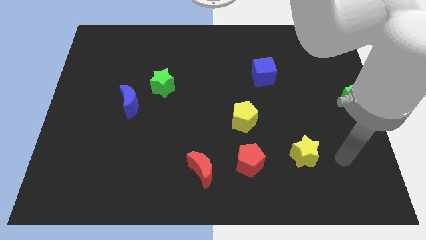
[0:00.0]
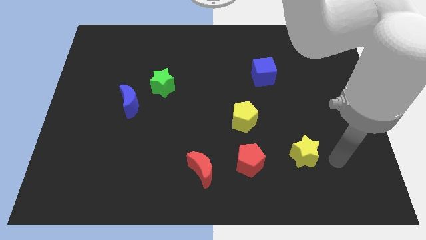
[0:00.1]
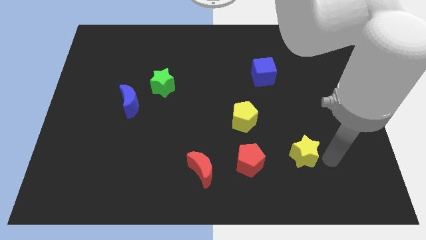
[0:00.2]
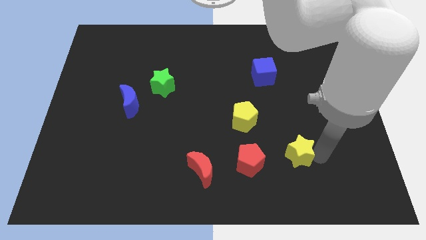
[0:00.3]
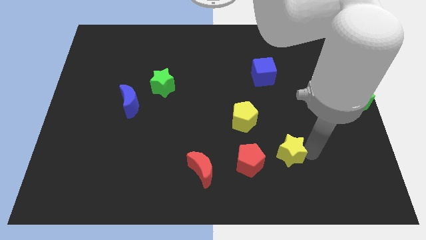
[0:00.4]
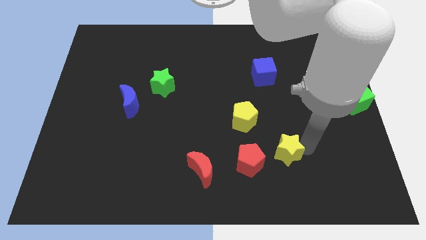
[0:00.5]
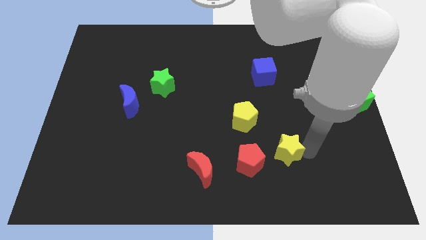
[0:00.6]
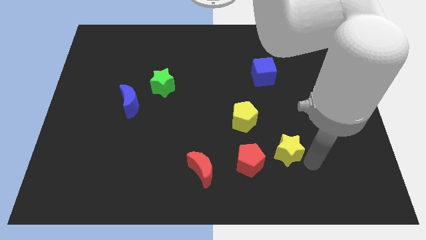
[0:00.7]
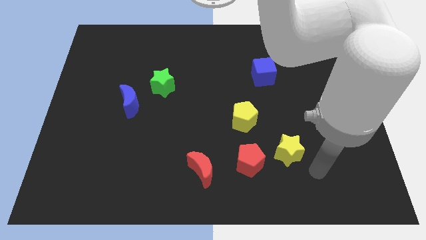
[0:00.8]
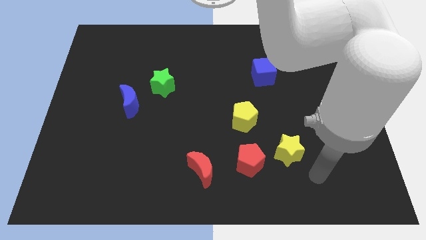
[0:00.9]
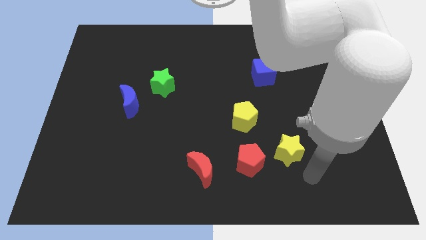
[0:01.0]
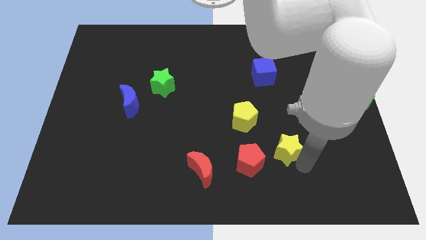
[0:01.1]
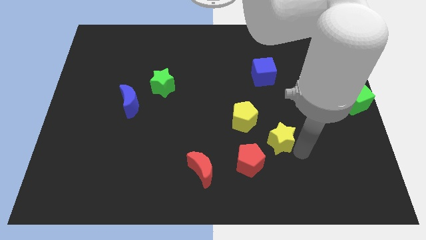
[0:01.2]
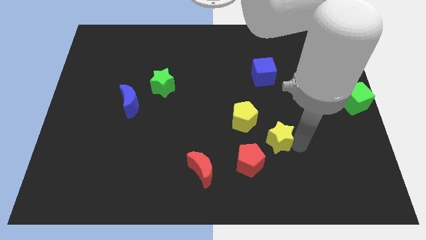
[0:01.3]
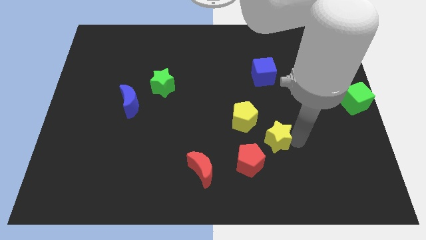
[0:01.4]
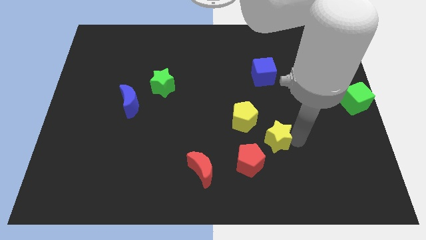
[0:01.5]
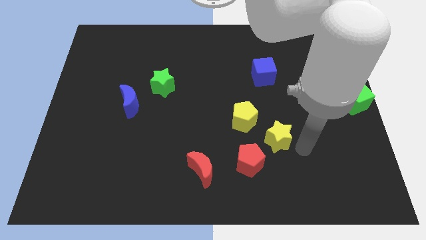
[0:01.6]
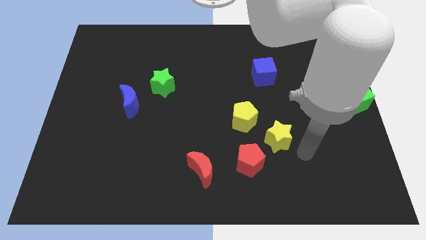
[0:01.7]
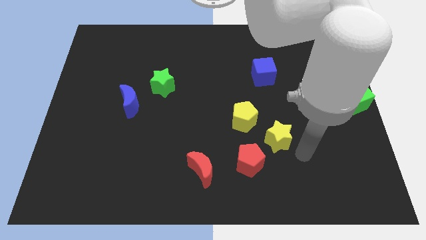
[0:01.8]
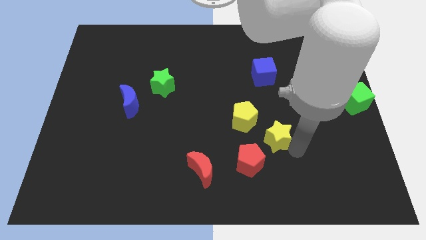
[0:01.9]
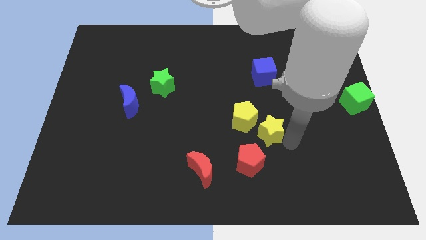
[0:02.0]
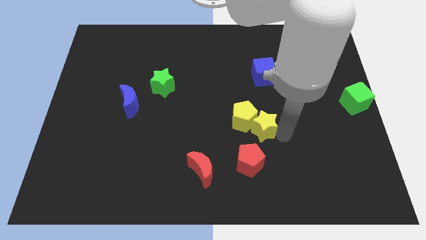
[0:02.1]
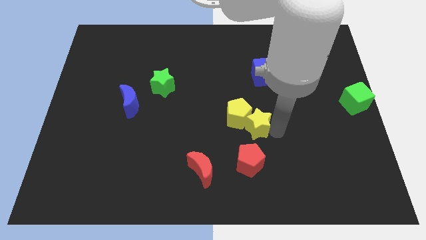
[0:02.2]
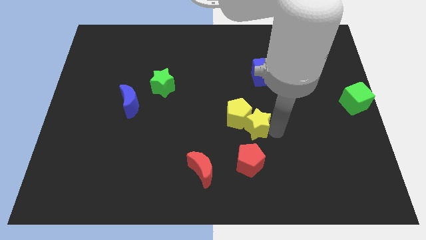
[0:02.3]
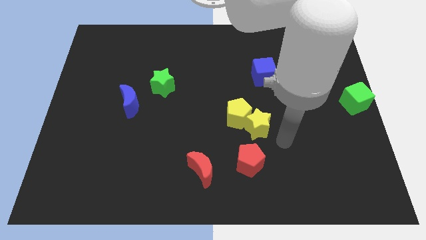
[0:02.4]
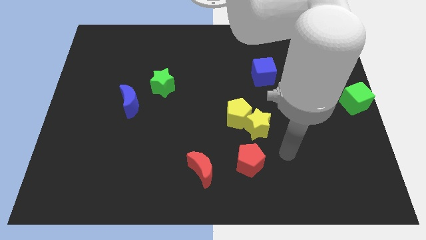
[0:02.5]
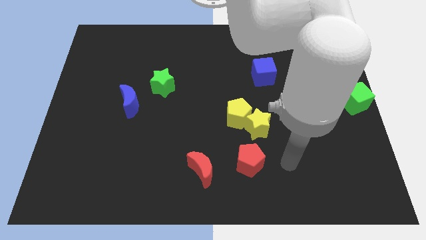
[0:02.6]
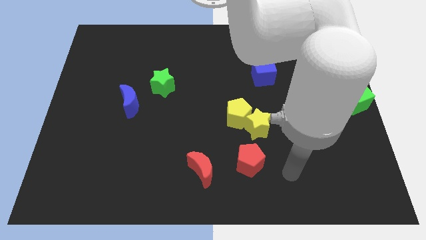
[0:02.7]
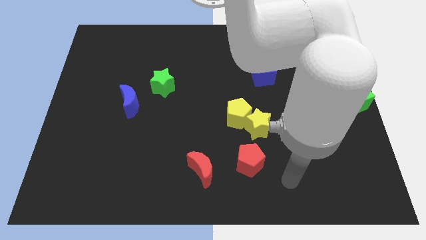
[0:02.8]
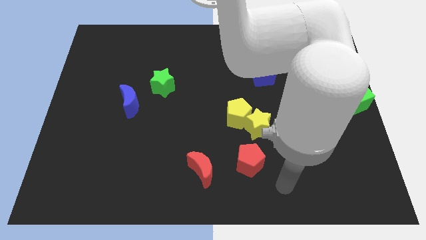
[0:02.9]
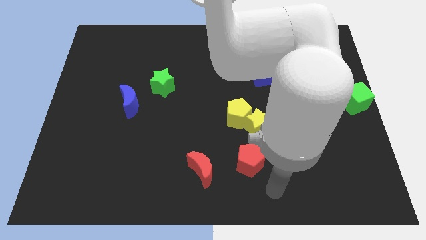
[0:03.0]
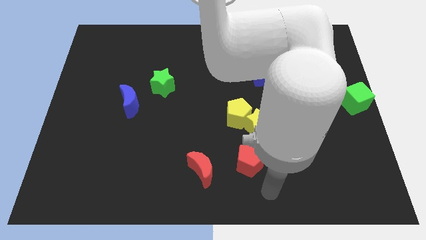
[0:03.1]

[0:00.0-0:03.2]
push the yellow star into the yellow pentagon

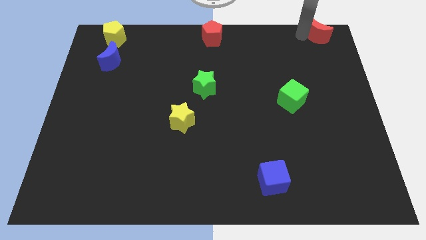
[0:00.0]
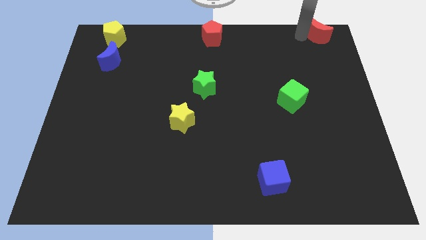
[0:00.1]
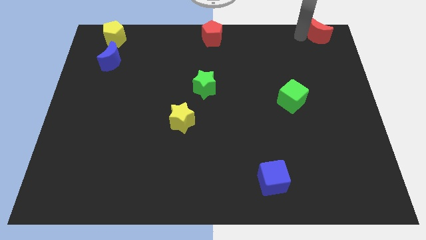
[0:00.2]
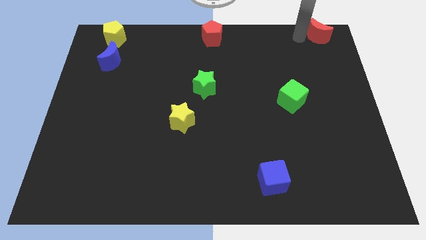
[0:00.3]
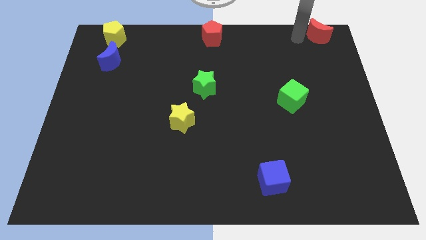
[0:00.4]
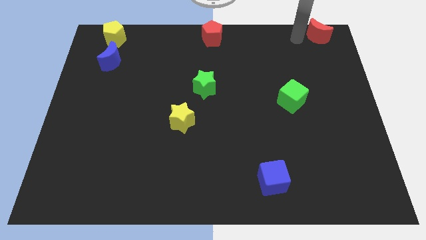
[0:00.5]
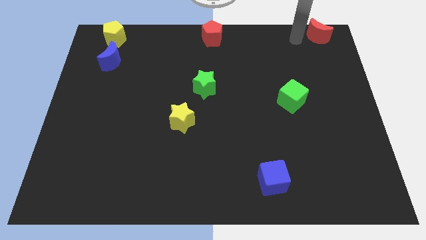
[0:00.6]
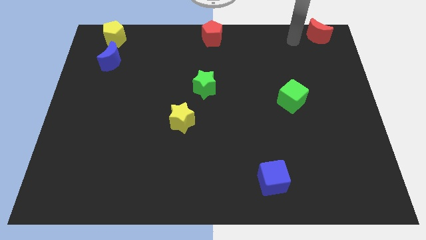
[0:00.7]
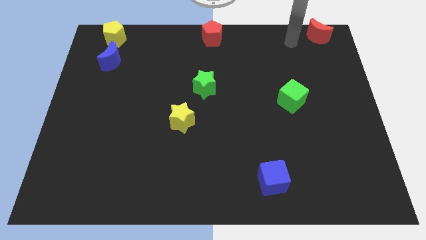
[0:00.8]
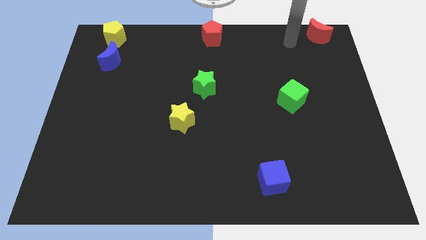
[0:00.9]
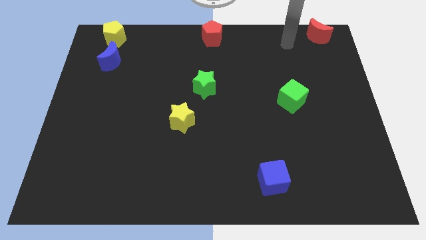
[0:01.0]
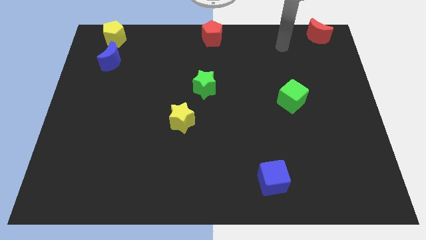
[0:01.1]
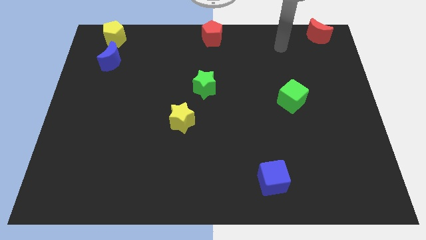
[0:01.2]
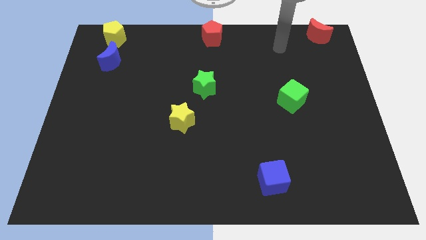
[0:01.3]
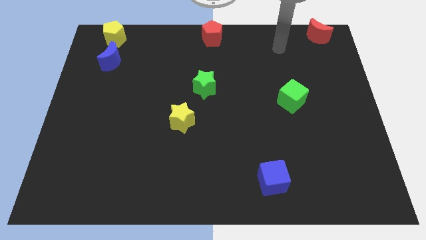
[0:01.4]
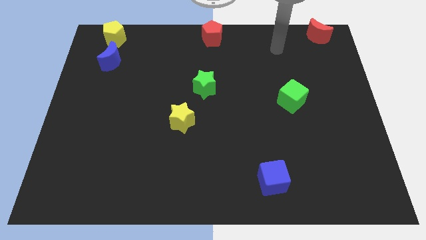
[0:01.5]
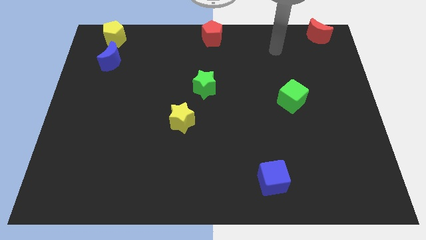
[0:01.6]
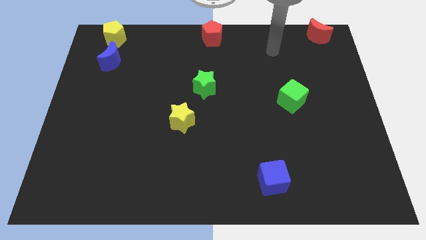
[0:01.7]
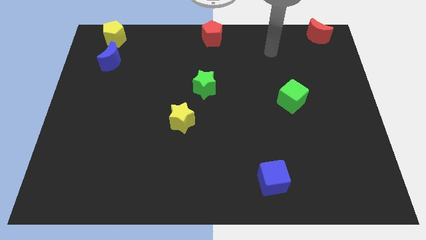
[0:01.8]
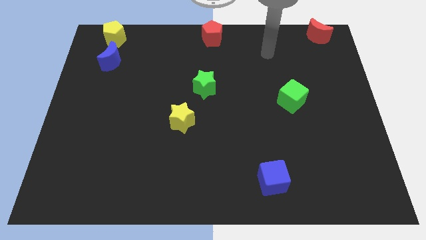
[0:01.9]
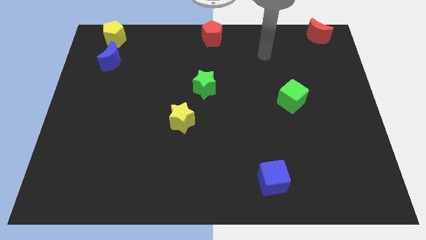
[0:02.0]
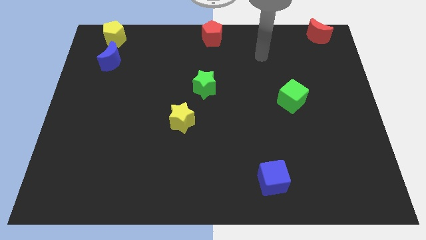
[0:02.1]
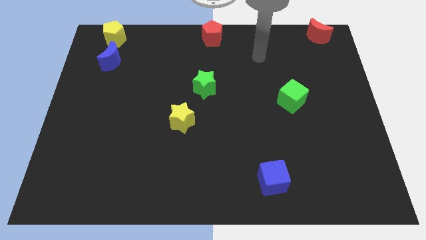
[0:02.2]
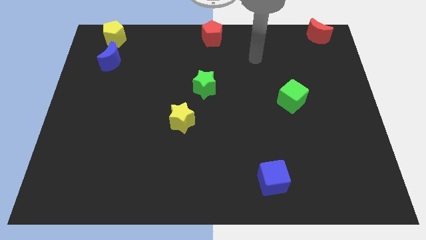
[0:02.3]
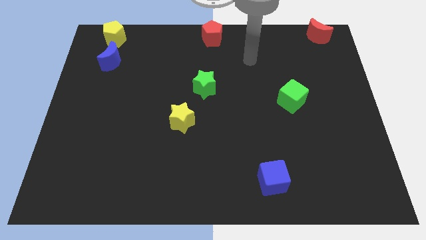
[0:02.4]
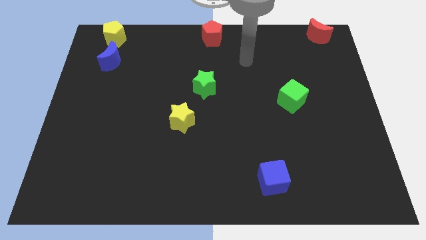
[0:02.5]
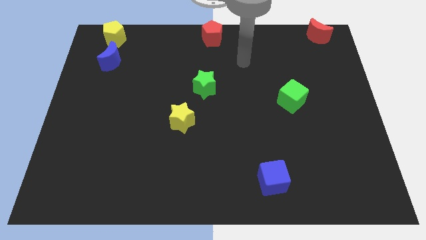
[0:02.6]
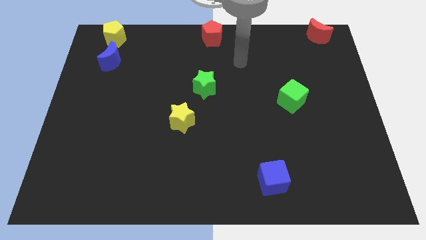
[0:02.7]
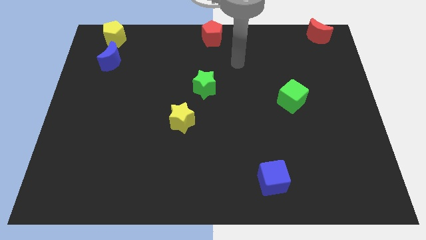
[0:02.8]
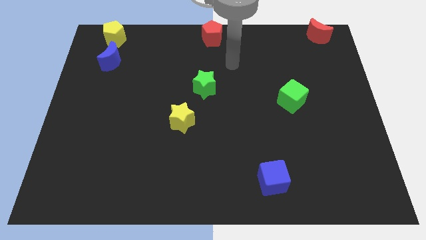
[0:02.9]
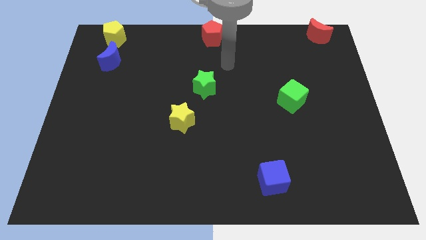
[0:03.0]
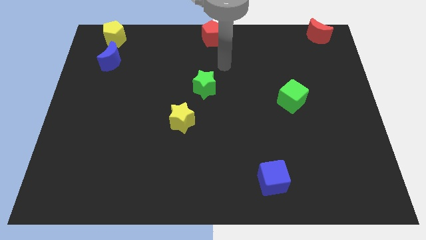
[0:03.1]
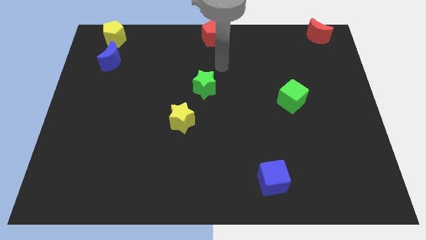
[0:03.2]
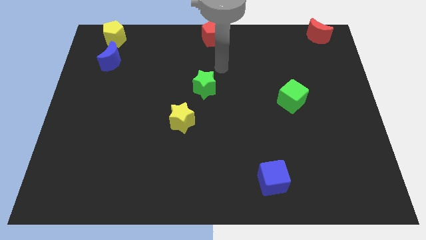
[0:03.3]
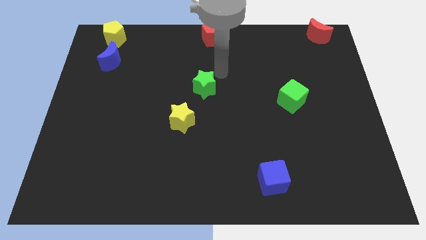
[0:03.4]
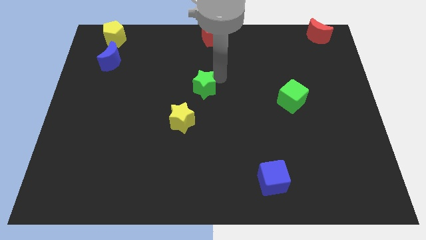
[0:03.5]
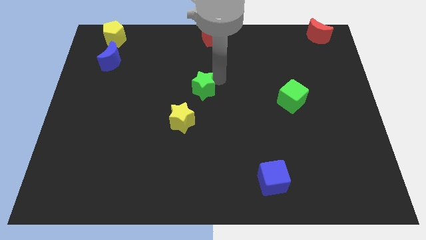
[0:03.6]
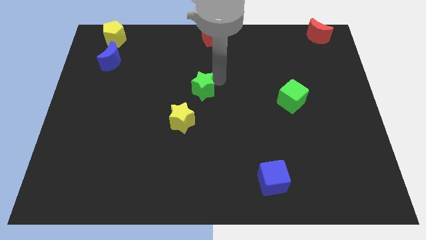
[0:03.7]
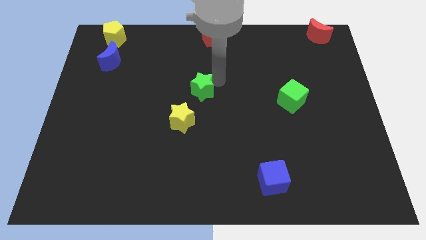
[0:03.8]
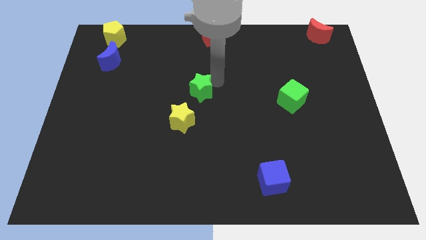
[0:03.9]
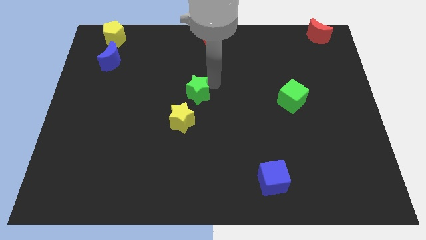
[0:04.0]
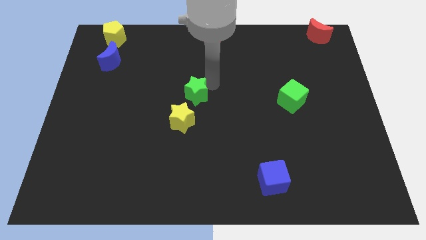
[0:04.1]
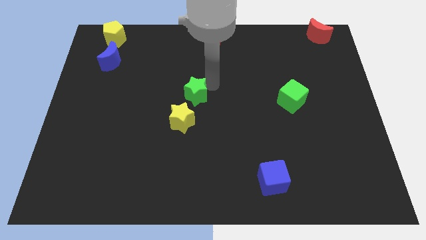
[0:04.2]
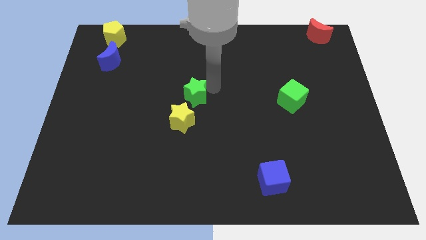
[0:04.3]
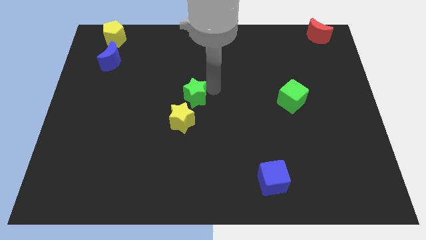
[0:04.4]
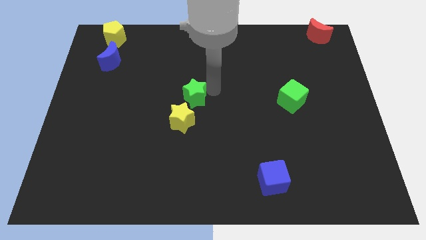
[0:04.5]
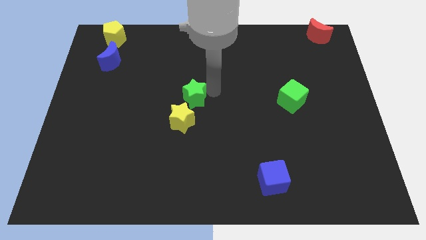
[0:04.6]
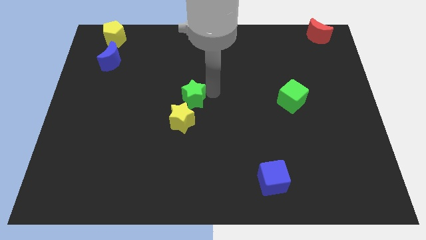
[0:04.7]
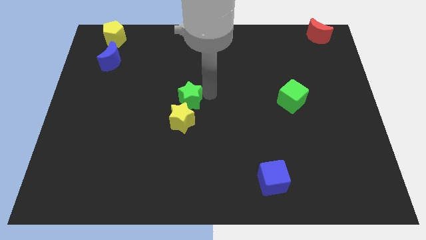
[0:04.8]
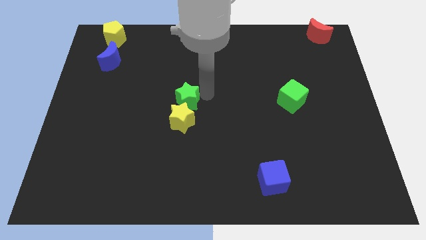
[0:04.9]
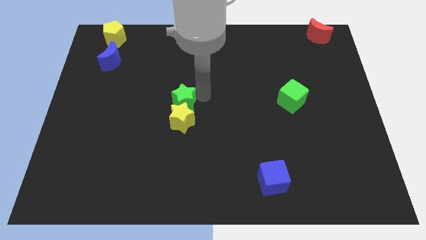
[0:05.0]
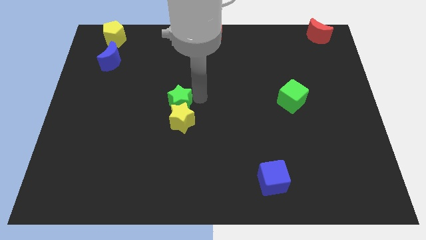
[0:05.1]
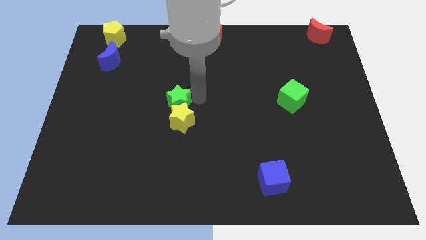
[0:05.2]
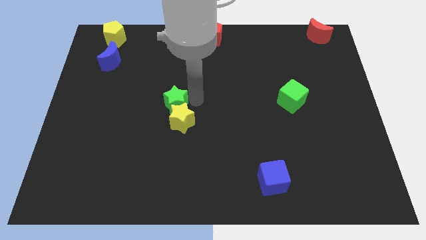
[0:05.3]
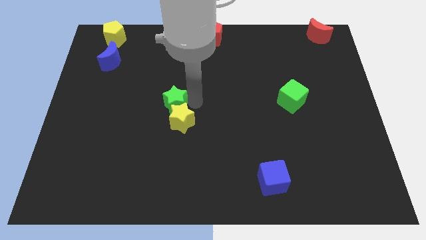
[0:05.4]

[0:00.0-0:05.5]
push the green star into the yellow star
